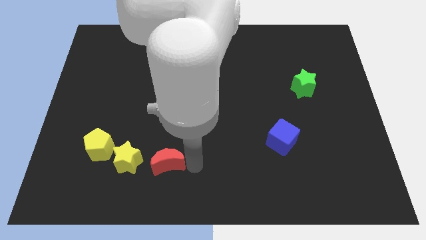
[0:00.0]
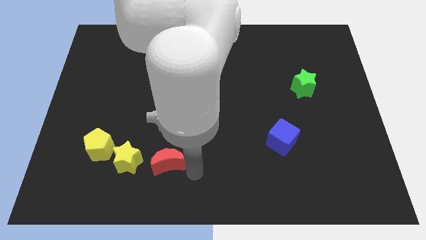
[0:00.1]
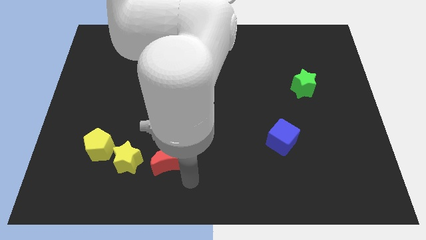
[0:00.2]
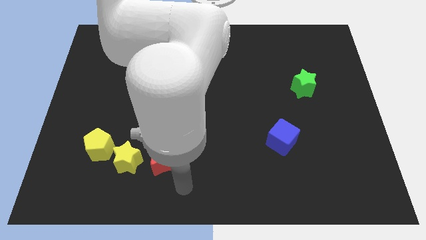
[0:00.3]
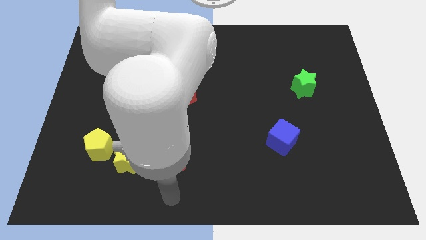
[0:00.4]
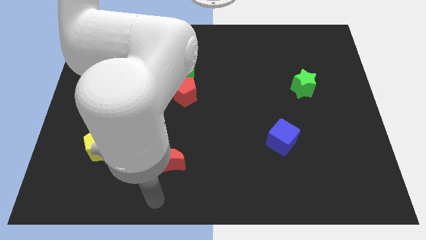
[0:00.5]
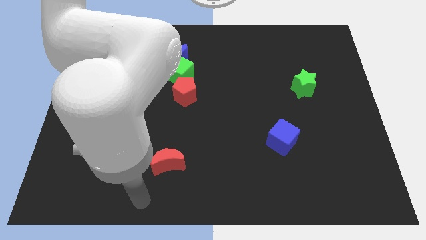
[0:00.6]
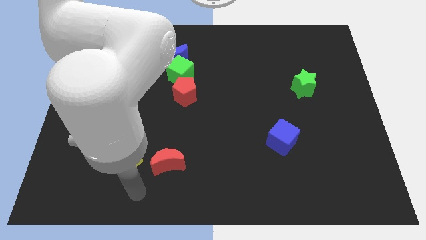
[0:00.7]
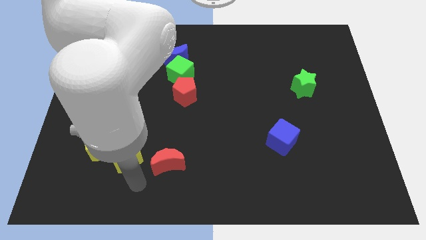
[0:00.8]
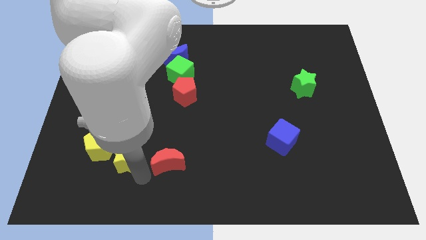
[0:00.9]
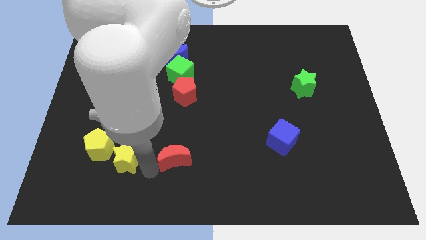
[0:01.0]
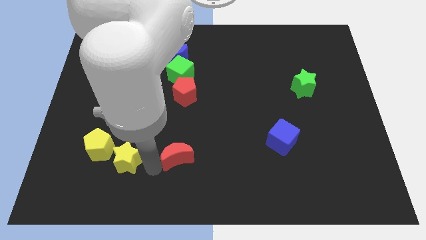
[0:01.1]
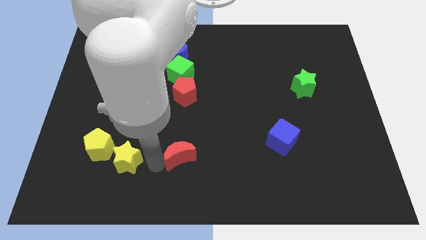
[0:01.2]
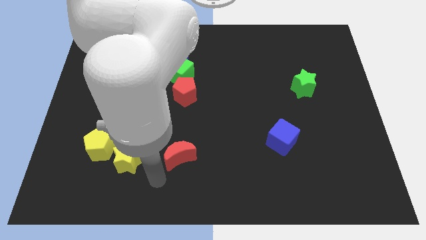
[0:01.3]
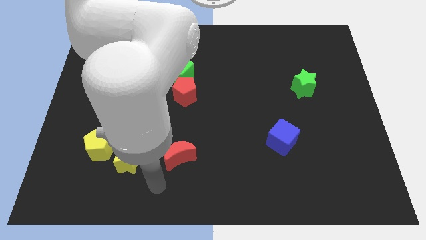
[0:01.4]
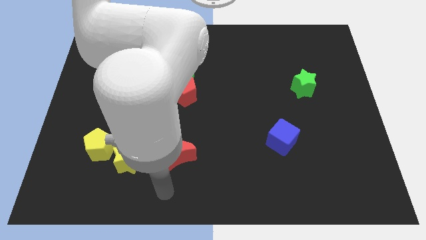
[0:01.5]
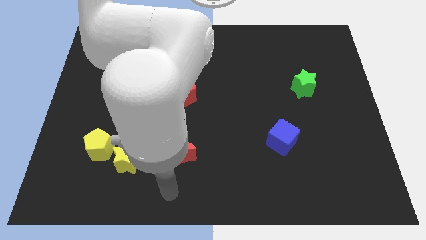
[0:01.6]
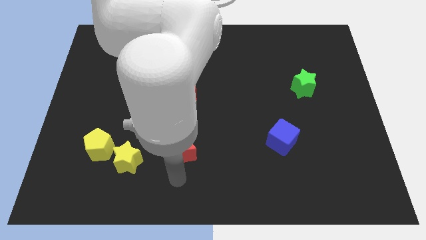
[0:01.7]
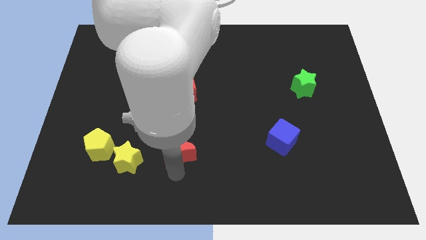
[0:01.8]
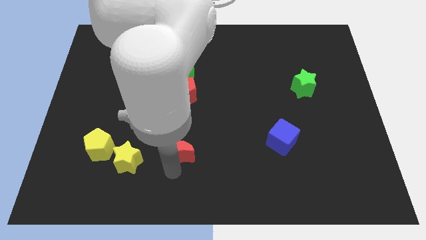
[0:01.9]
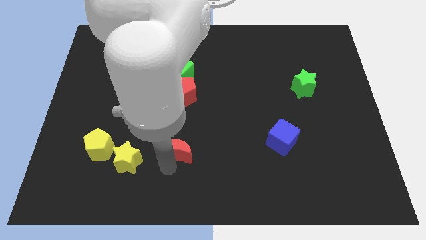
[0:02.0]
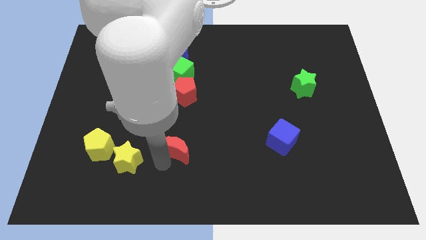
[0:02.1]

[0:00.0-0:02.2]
put the red moon vertically below the red pentagon

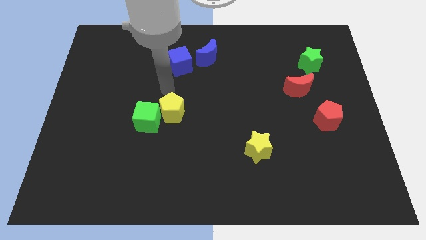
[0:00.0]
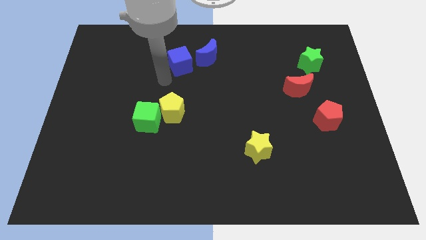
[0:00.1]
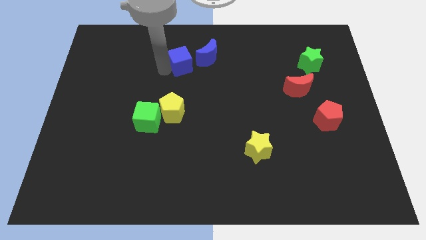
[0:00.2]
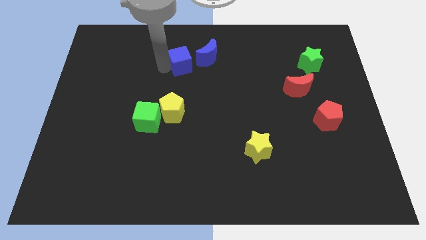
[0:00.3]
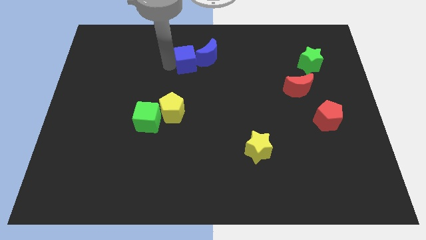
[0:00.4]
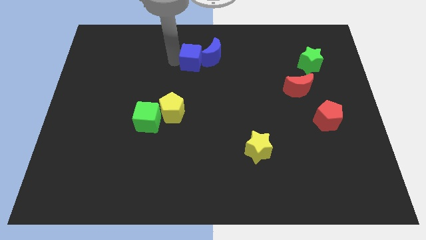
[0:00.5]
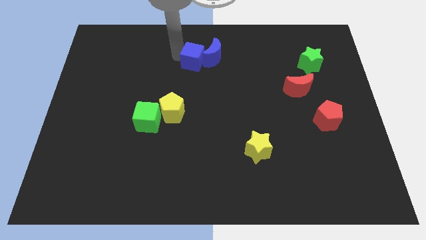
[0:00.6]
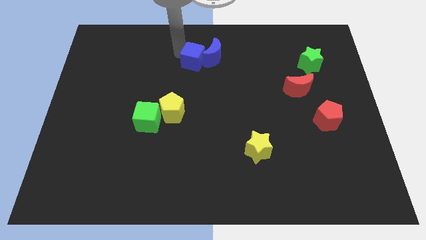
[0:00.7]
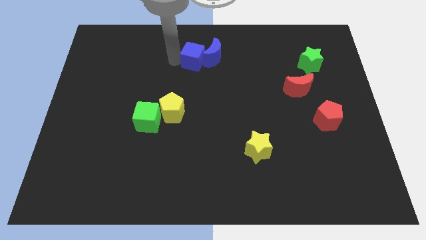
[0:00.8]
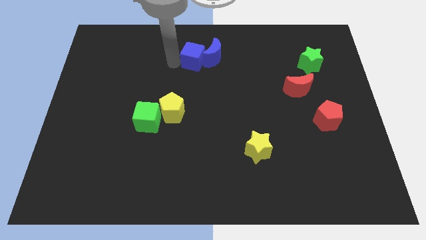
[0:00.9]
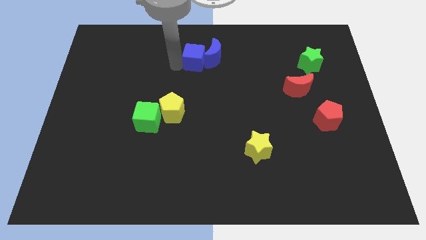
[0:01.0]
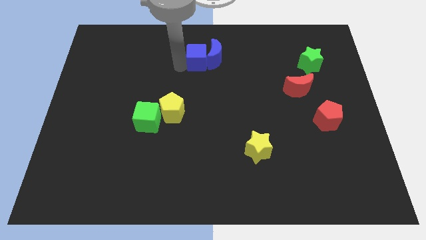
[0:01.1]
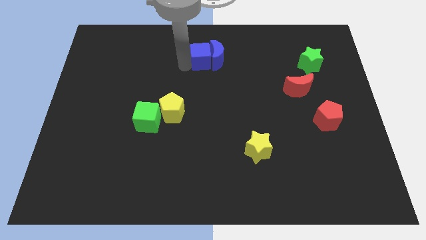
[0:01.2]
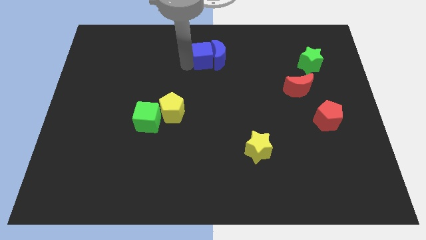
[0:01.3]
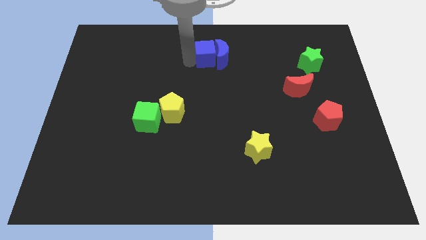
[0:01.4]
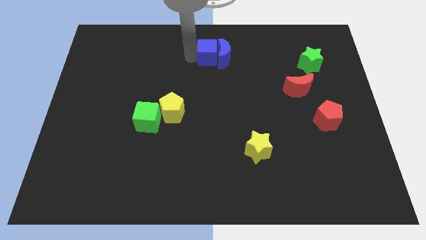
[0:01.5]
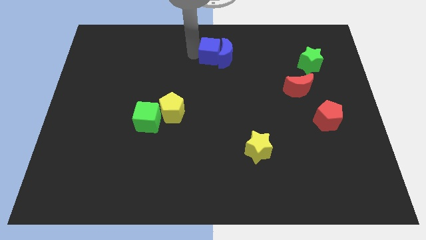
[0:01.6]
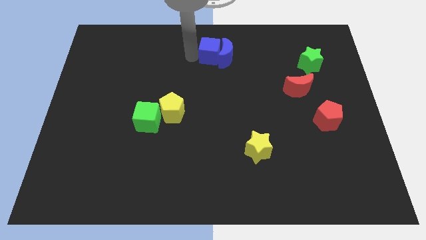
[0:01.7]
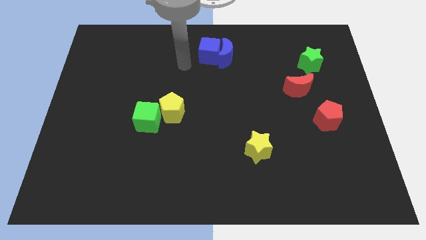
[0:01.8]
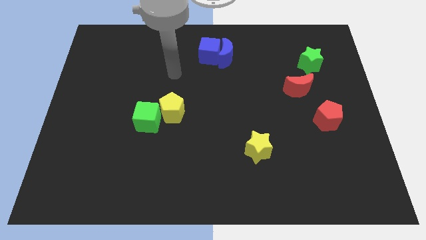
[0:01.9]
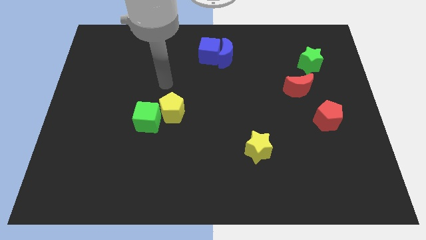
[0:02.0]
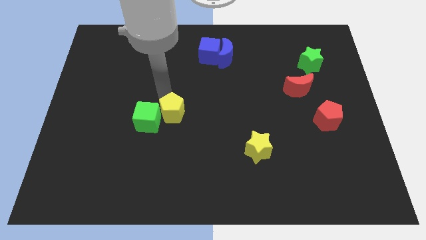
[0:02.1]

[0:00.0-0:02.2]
place the blue cube along with the blue moon at the top center of the board

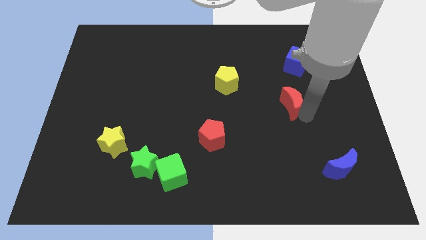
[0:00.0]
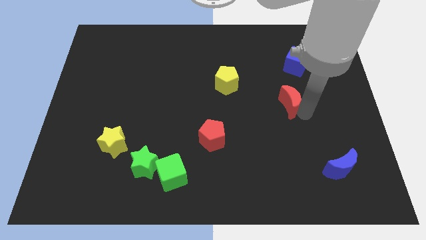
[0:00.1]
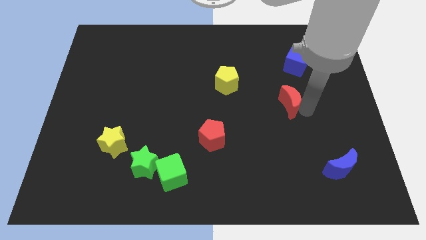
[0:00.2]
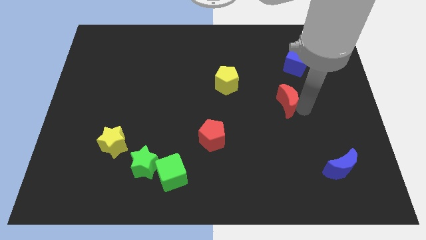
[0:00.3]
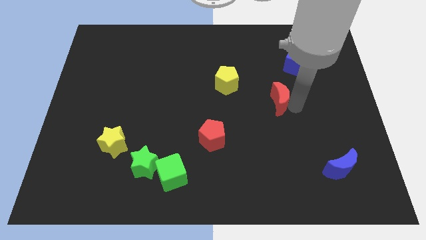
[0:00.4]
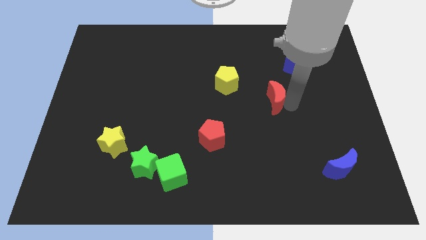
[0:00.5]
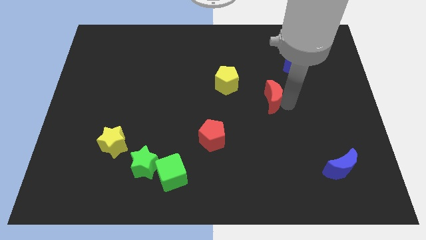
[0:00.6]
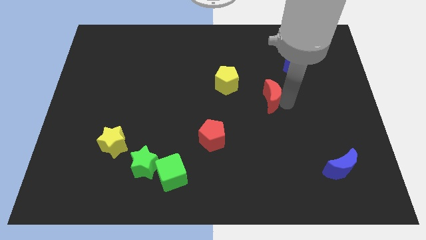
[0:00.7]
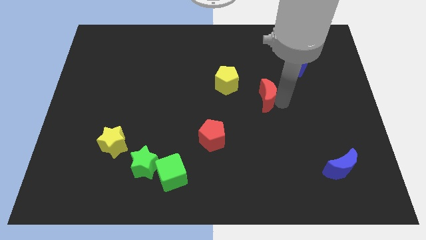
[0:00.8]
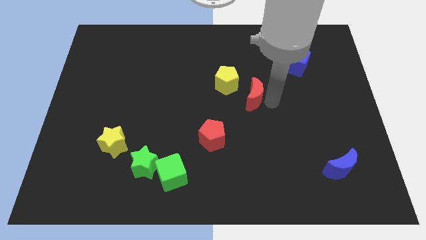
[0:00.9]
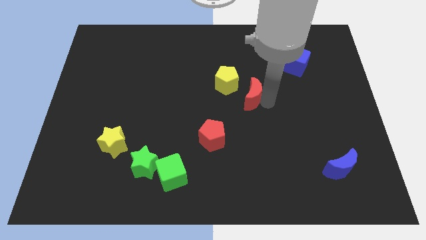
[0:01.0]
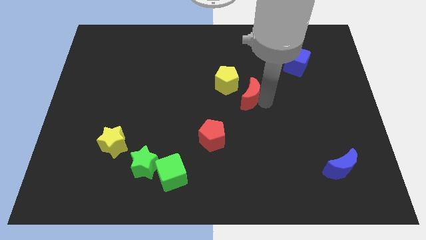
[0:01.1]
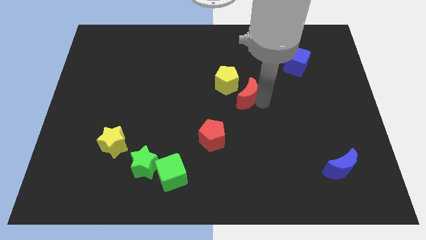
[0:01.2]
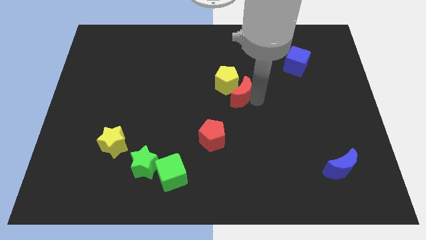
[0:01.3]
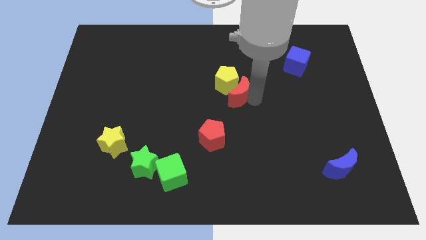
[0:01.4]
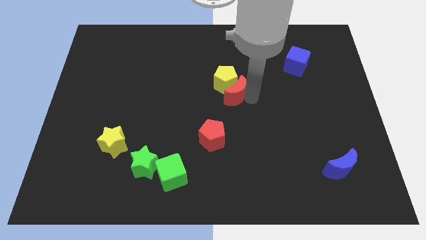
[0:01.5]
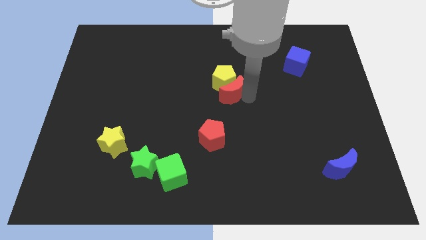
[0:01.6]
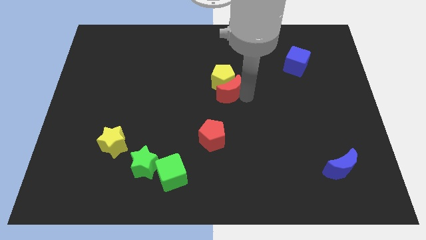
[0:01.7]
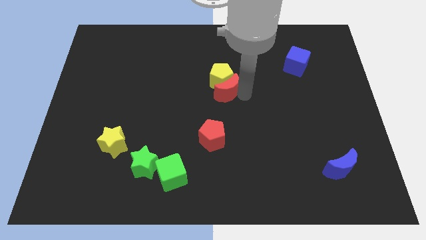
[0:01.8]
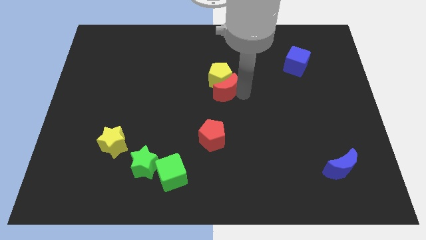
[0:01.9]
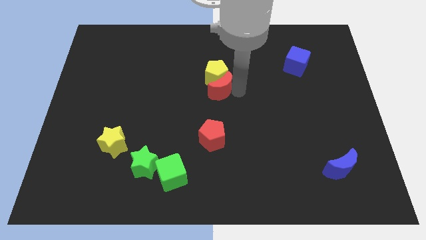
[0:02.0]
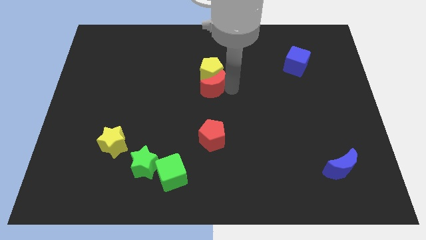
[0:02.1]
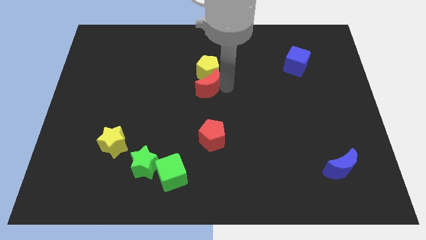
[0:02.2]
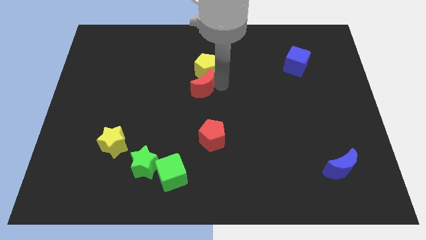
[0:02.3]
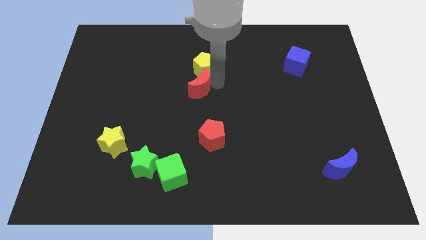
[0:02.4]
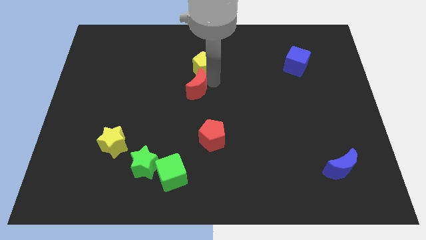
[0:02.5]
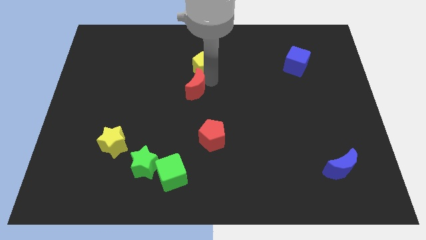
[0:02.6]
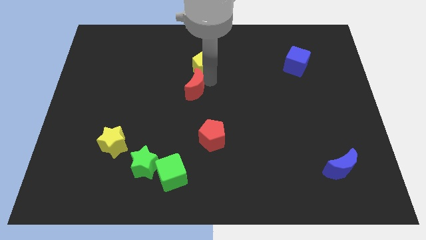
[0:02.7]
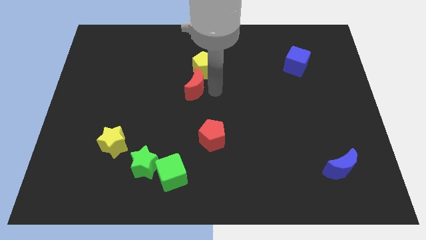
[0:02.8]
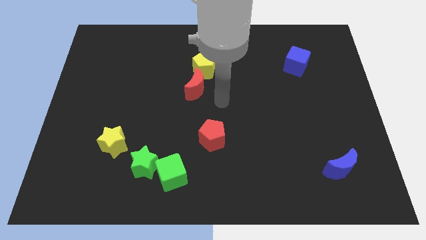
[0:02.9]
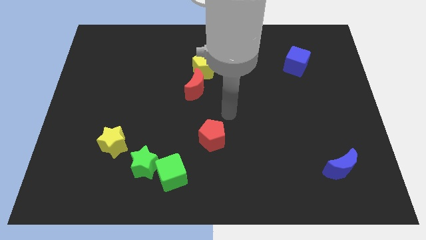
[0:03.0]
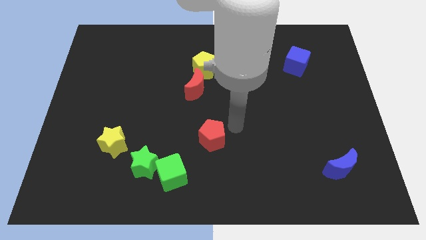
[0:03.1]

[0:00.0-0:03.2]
slightly move red crescent into yellow pentagon

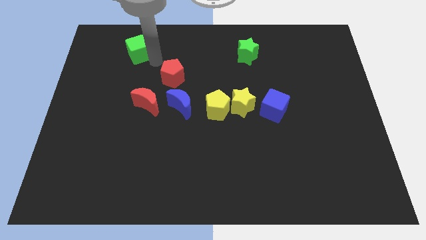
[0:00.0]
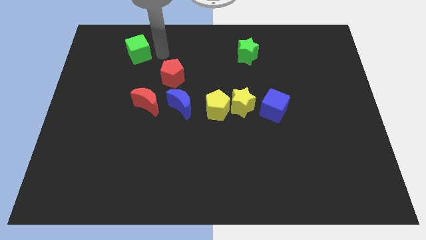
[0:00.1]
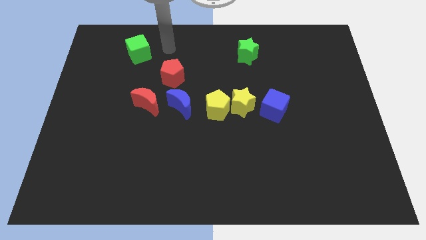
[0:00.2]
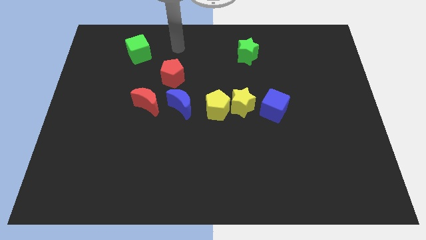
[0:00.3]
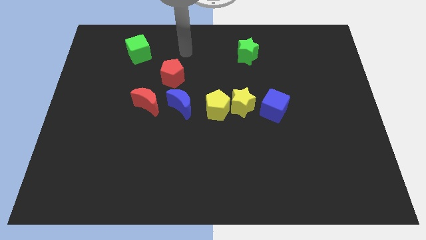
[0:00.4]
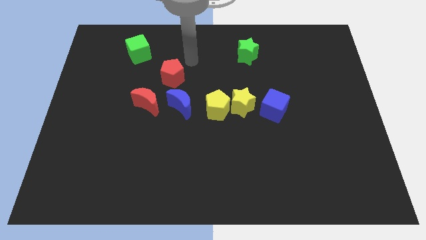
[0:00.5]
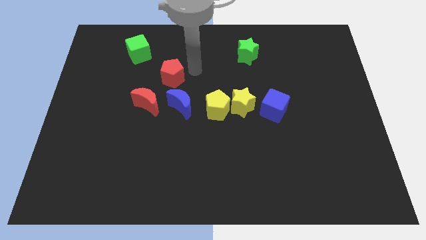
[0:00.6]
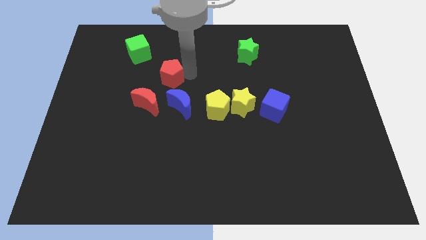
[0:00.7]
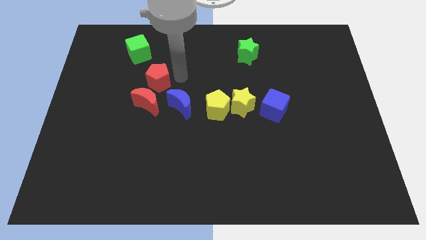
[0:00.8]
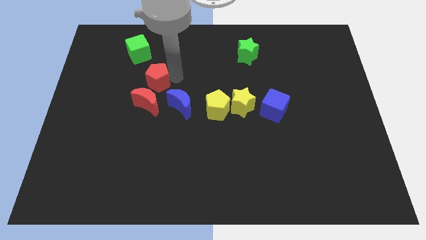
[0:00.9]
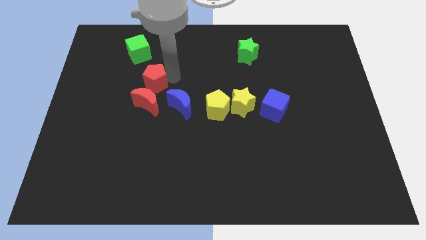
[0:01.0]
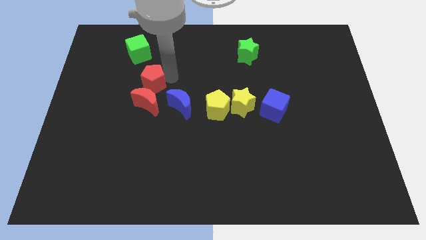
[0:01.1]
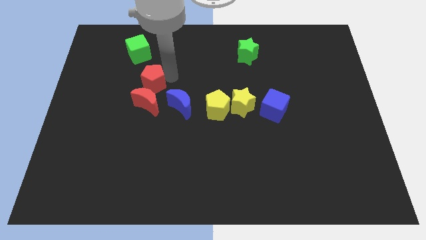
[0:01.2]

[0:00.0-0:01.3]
slightly push the red pentagon towards the left side of the board
